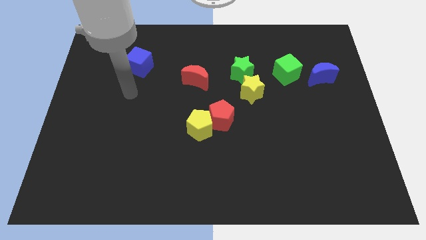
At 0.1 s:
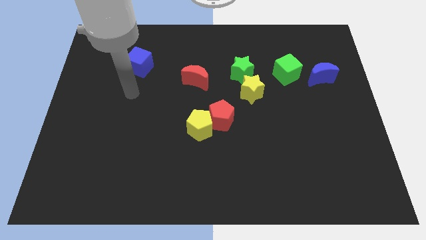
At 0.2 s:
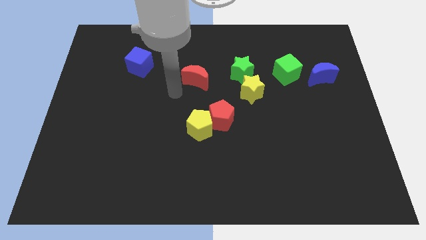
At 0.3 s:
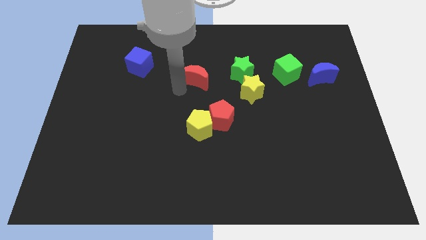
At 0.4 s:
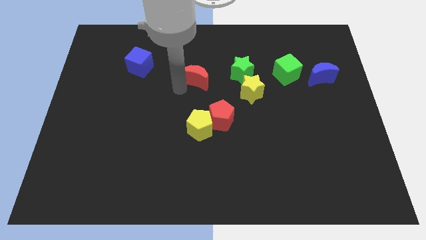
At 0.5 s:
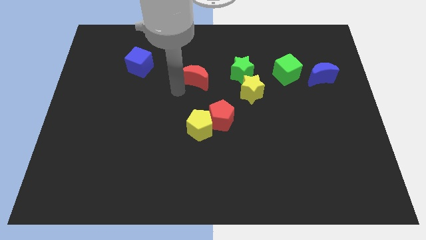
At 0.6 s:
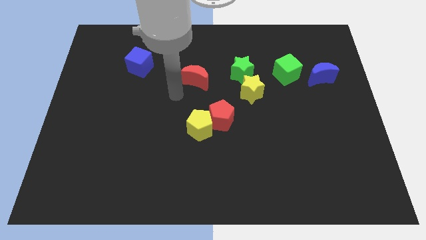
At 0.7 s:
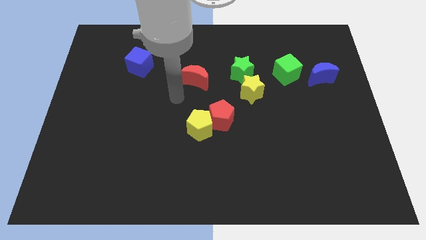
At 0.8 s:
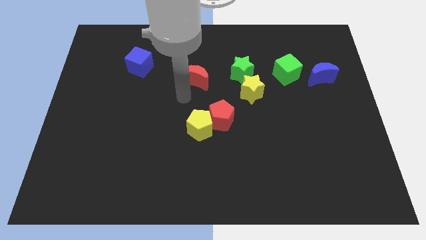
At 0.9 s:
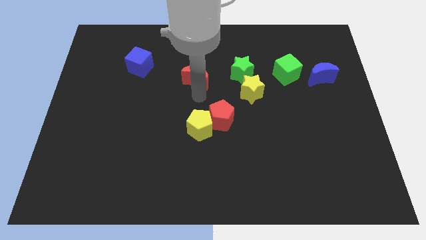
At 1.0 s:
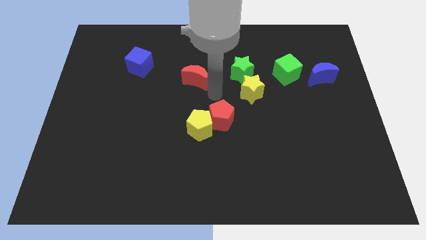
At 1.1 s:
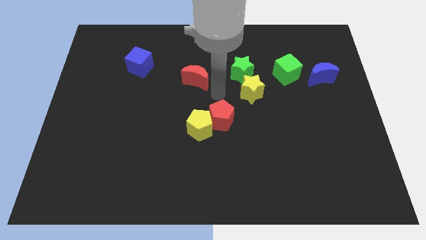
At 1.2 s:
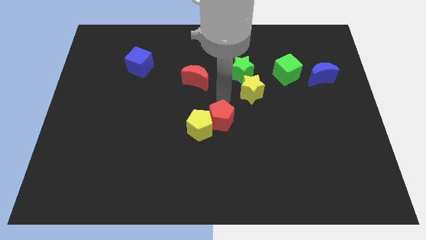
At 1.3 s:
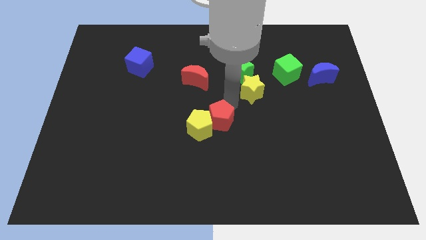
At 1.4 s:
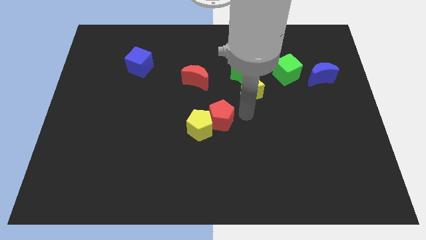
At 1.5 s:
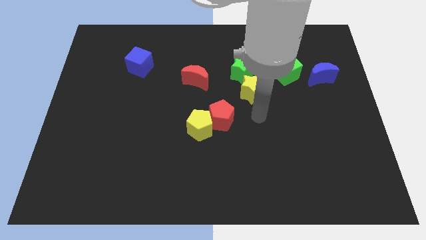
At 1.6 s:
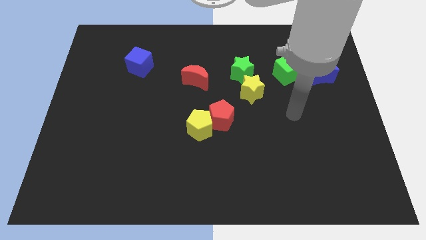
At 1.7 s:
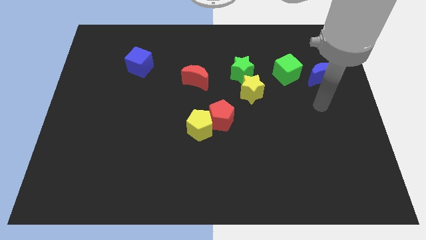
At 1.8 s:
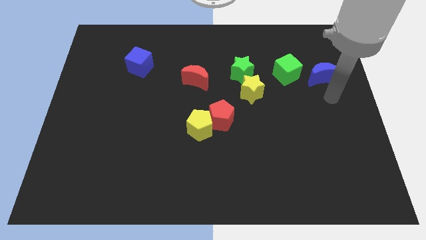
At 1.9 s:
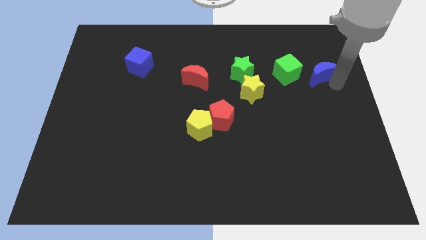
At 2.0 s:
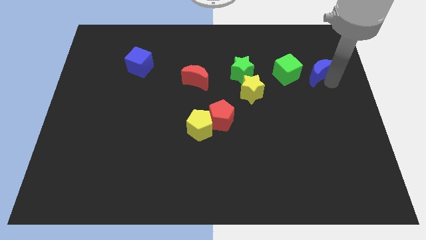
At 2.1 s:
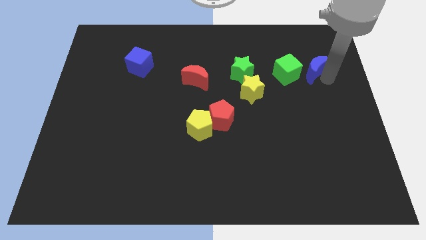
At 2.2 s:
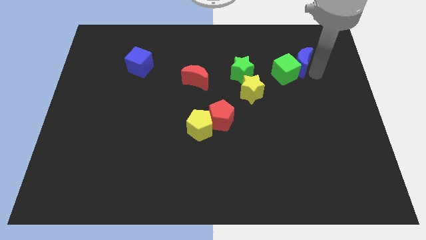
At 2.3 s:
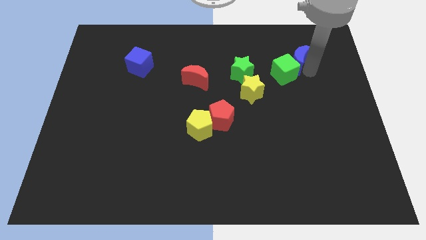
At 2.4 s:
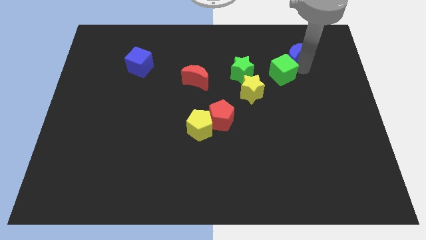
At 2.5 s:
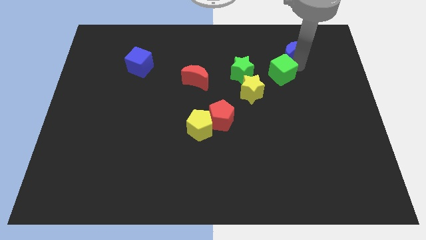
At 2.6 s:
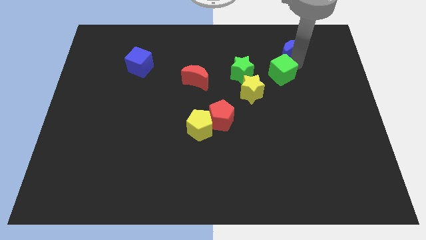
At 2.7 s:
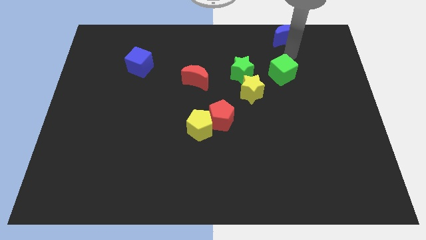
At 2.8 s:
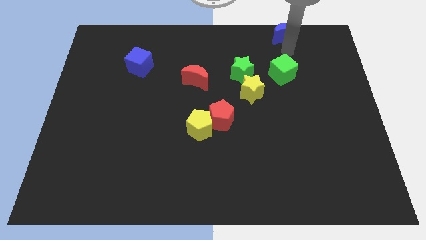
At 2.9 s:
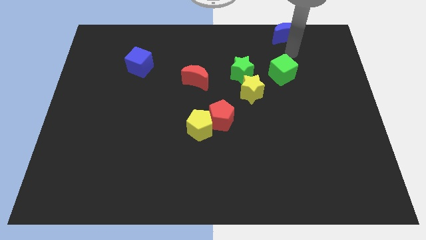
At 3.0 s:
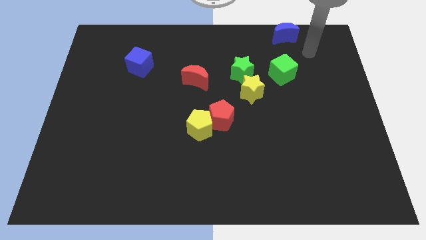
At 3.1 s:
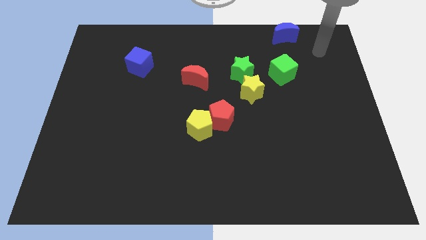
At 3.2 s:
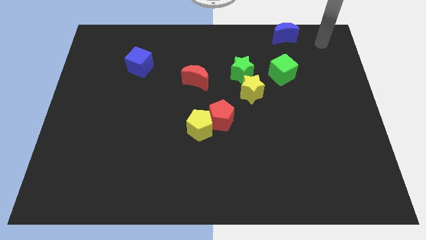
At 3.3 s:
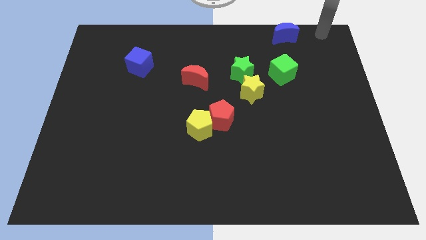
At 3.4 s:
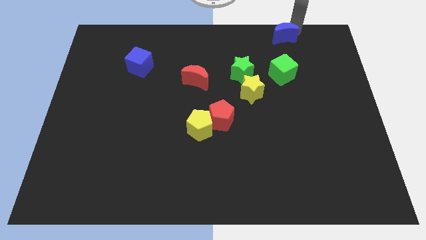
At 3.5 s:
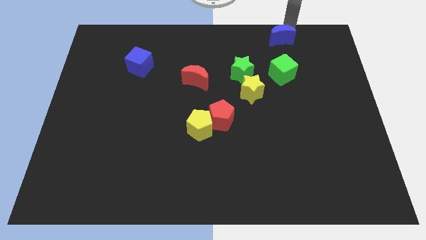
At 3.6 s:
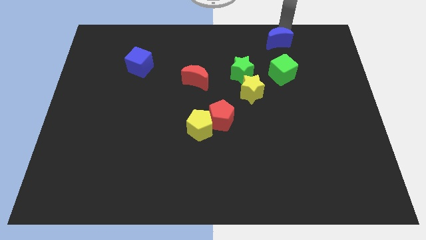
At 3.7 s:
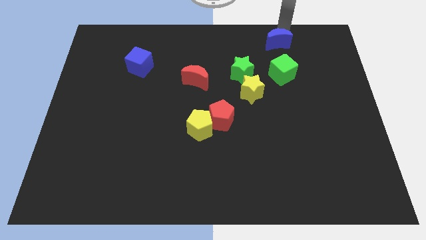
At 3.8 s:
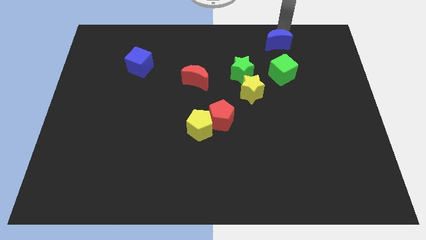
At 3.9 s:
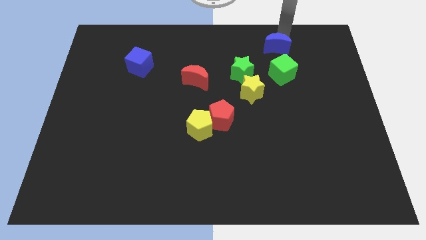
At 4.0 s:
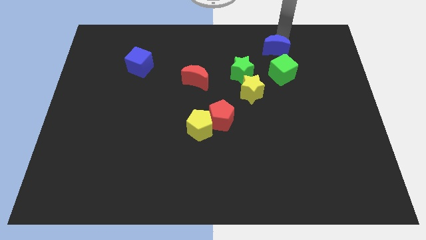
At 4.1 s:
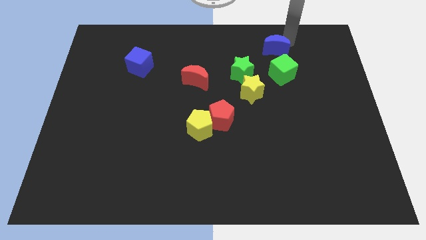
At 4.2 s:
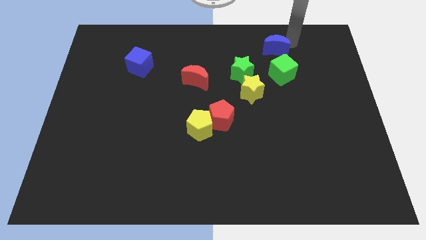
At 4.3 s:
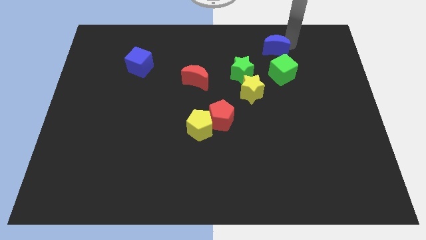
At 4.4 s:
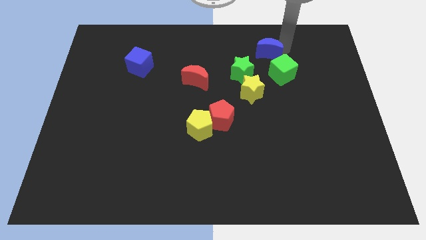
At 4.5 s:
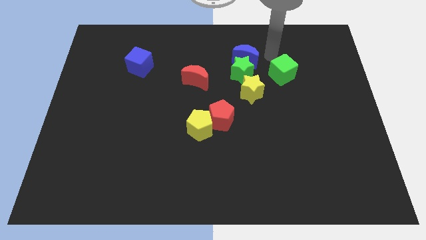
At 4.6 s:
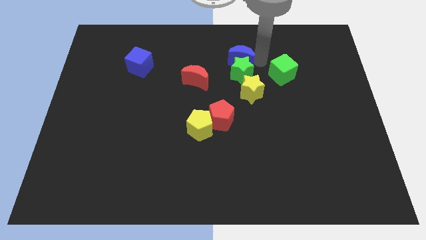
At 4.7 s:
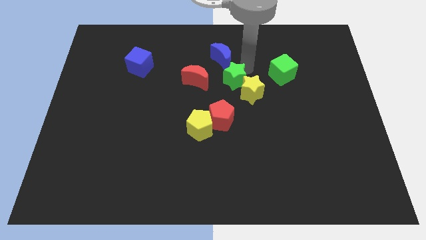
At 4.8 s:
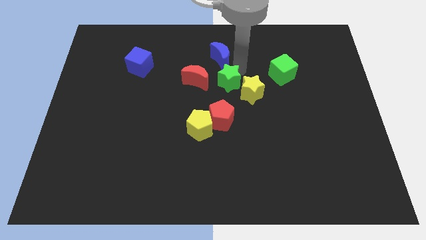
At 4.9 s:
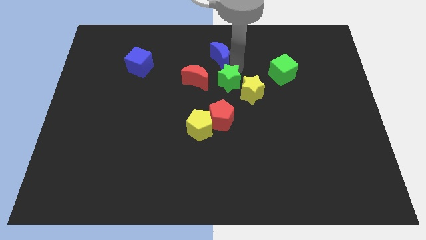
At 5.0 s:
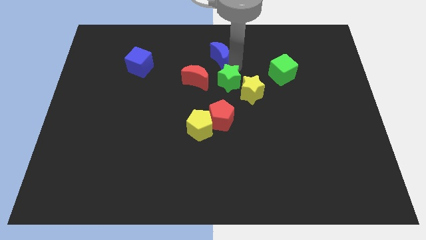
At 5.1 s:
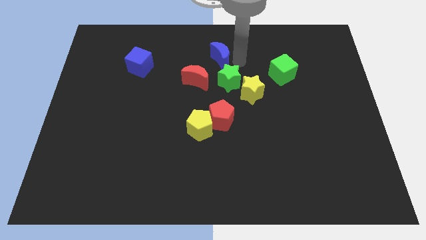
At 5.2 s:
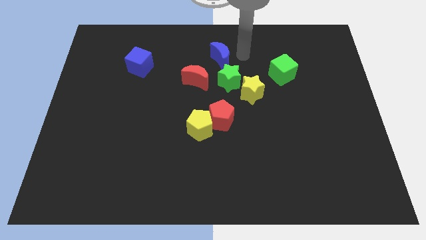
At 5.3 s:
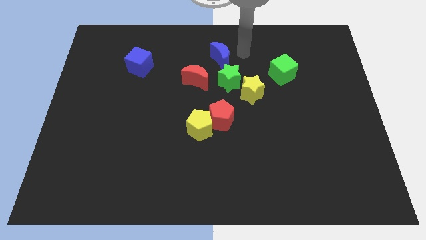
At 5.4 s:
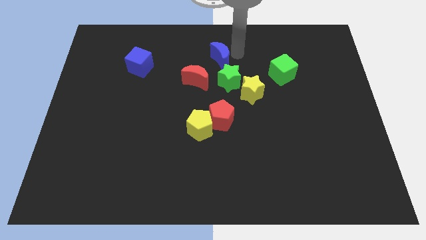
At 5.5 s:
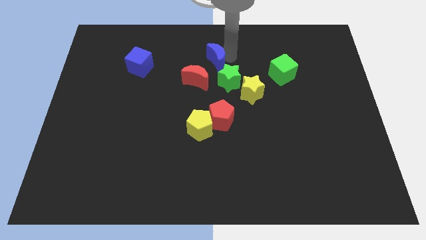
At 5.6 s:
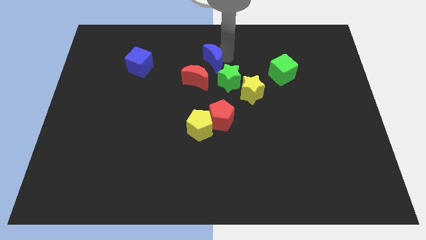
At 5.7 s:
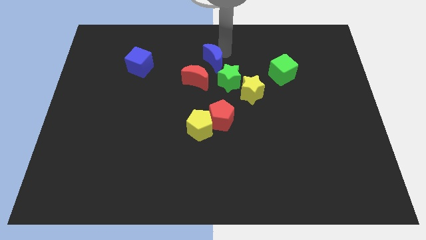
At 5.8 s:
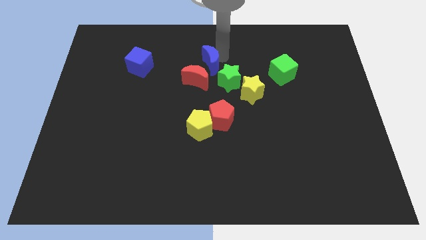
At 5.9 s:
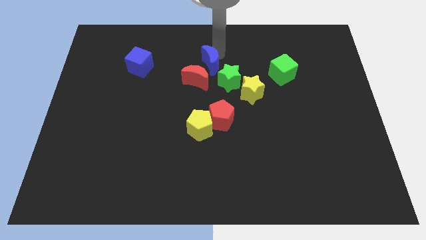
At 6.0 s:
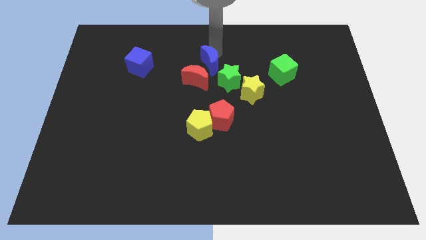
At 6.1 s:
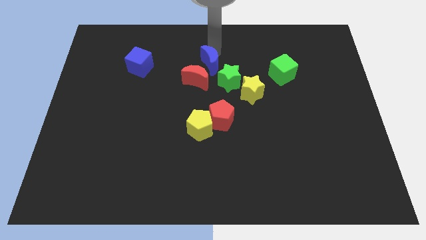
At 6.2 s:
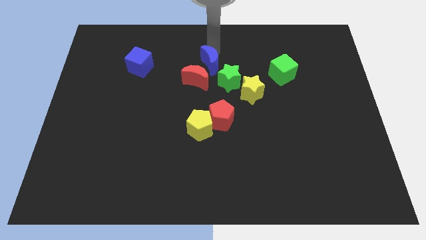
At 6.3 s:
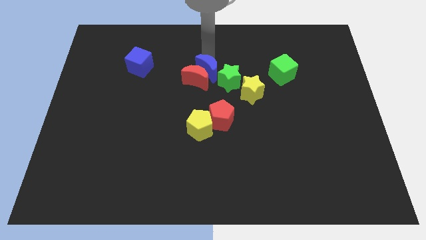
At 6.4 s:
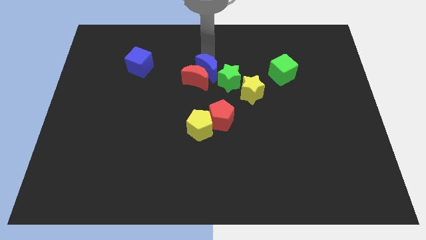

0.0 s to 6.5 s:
move the blue moon towards the red moon

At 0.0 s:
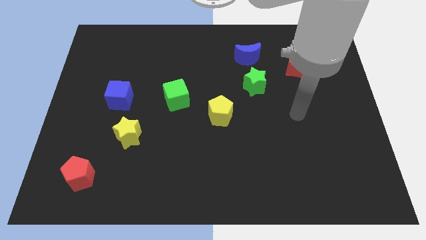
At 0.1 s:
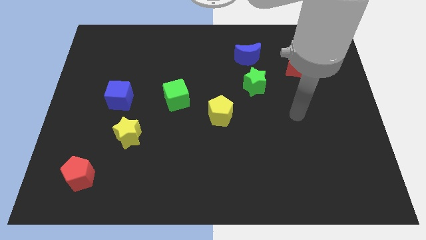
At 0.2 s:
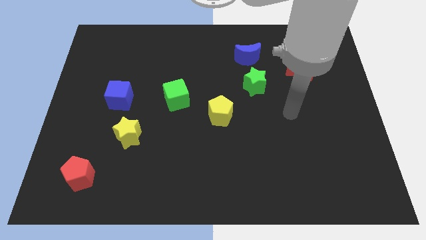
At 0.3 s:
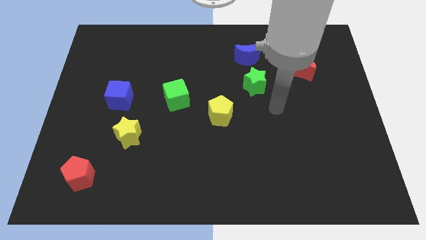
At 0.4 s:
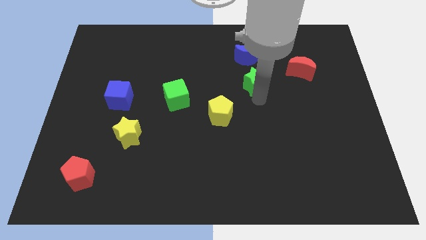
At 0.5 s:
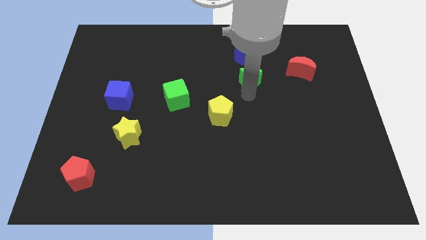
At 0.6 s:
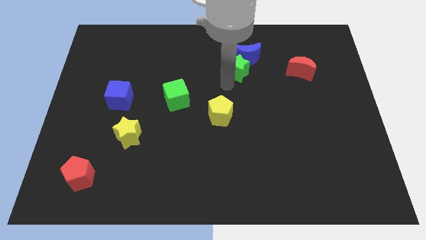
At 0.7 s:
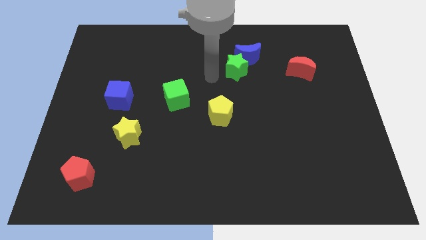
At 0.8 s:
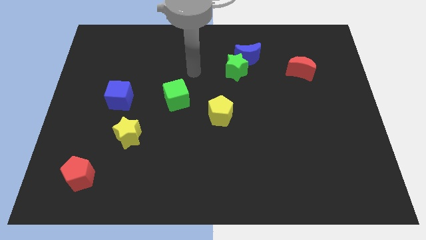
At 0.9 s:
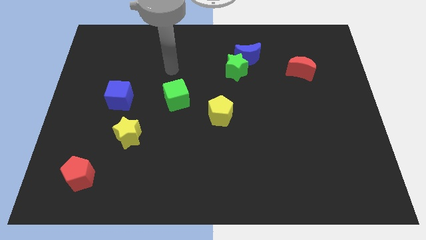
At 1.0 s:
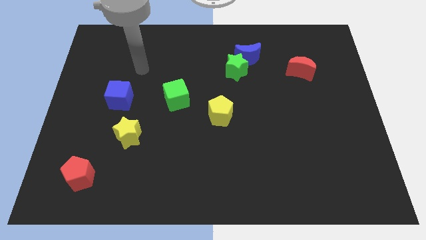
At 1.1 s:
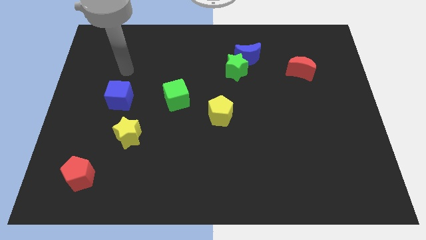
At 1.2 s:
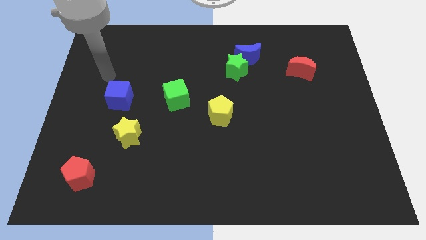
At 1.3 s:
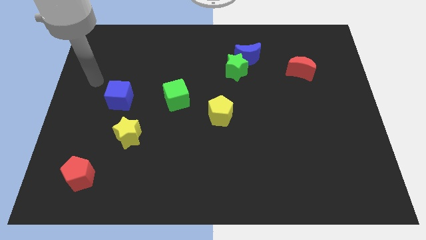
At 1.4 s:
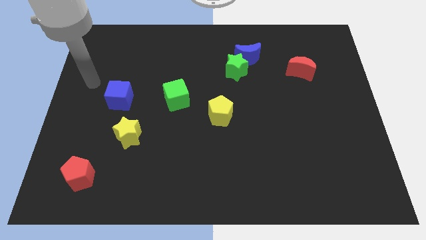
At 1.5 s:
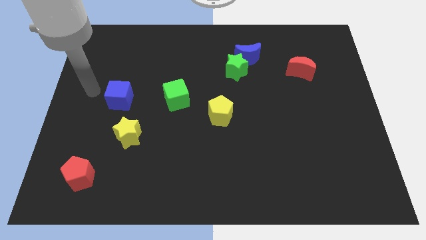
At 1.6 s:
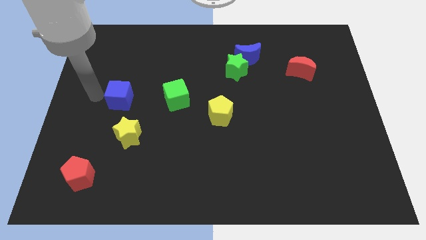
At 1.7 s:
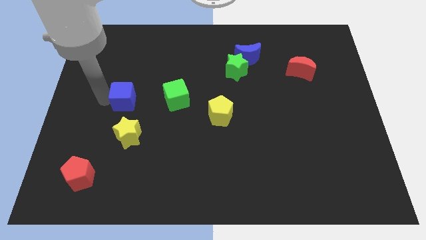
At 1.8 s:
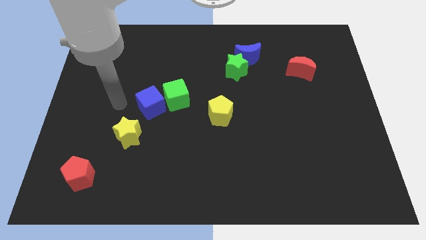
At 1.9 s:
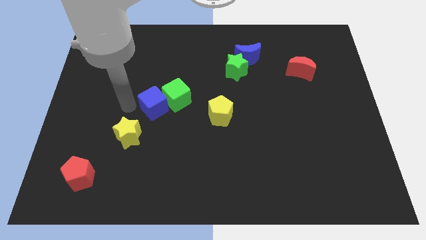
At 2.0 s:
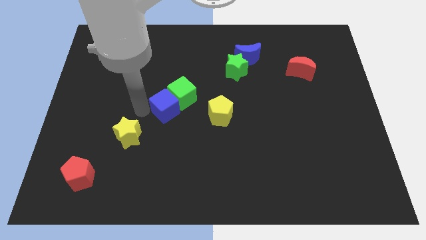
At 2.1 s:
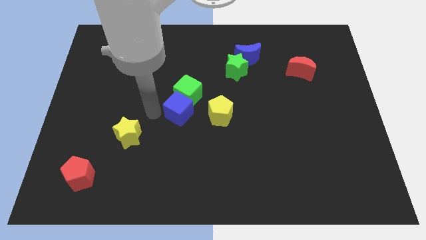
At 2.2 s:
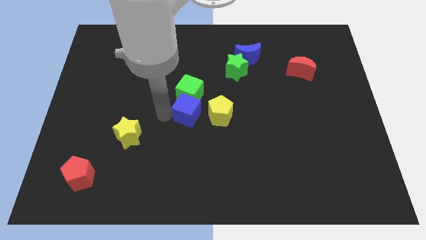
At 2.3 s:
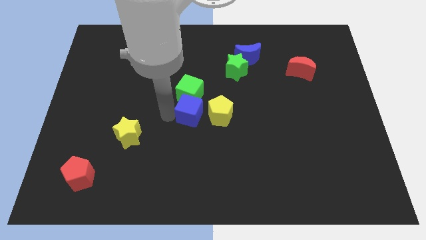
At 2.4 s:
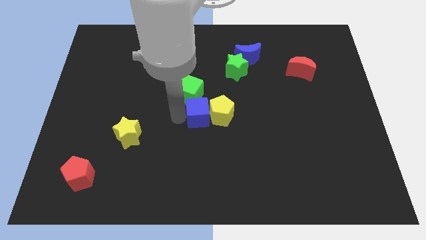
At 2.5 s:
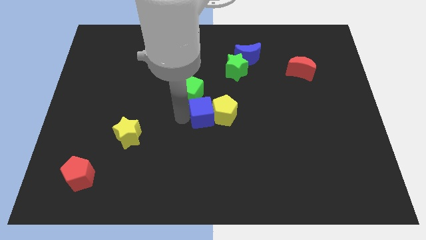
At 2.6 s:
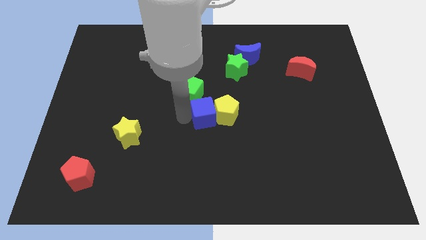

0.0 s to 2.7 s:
put the blue cube close to the yellow pentagon
